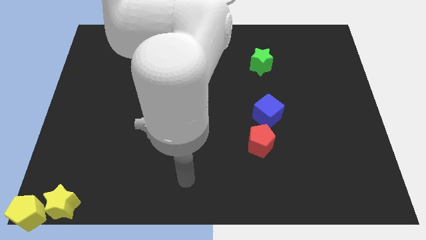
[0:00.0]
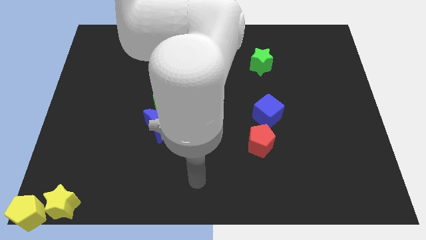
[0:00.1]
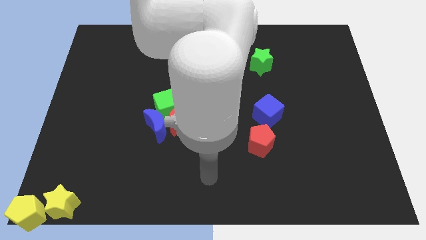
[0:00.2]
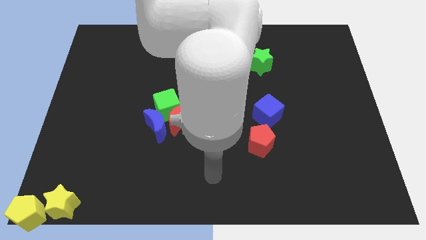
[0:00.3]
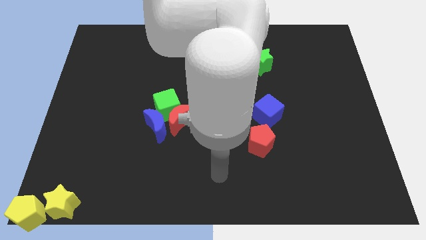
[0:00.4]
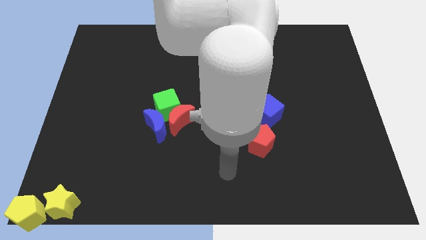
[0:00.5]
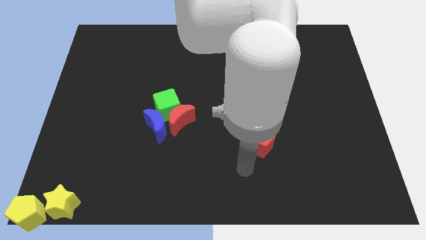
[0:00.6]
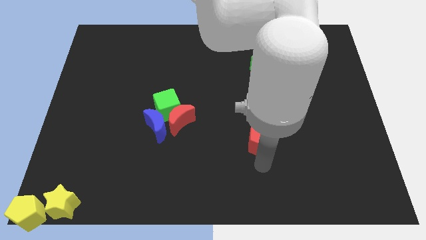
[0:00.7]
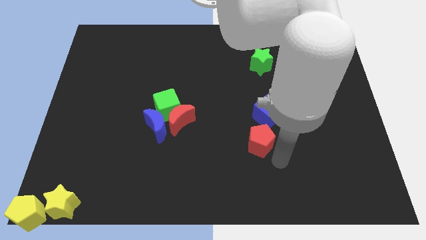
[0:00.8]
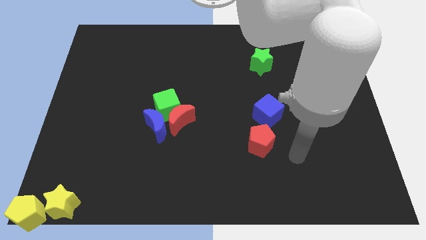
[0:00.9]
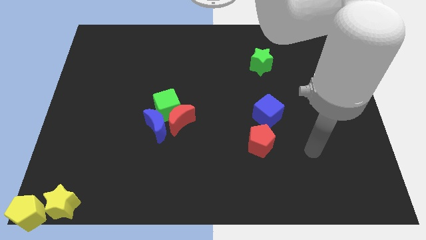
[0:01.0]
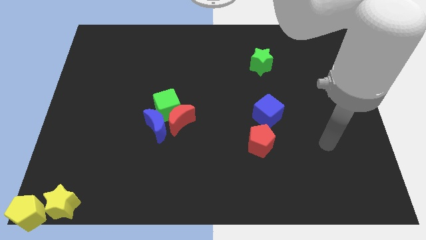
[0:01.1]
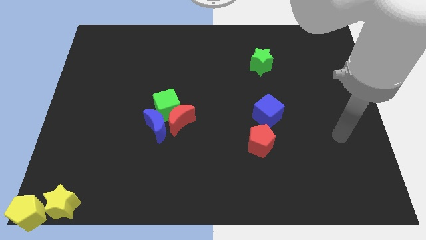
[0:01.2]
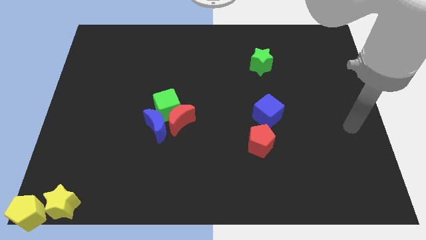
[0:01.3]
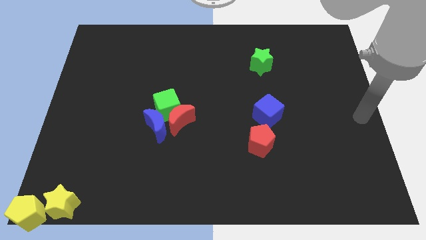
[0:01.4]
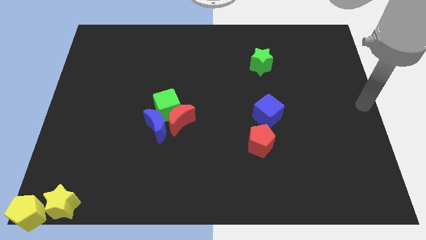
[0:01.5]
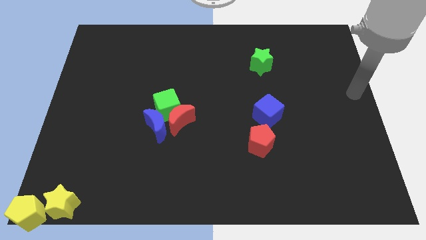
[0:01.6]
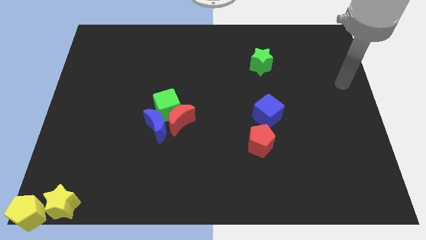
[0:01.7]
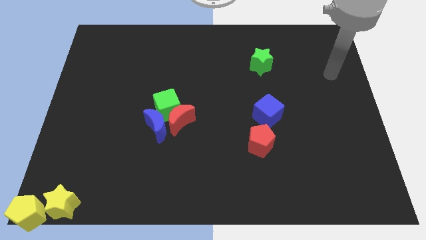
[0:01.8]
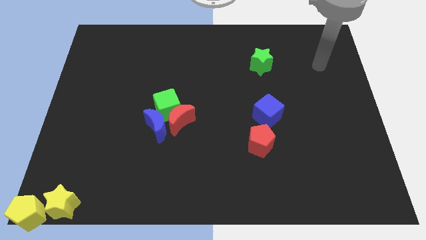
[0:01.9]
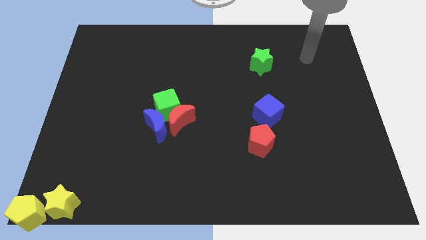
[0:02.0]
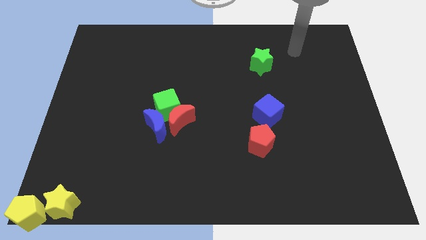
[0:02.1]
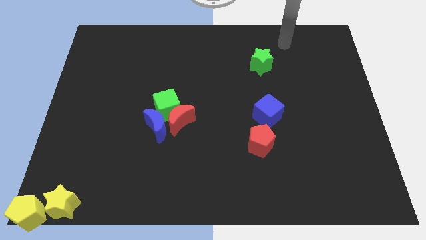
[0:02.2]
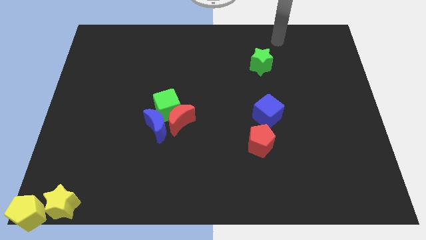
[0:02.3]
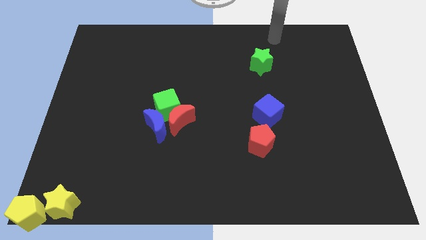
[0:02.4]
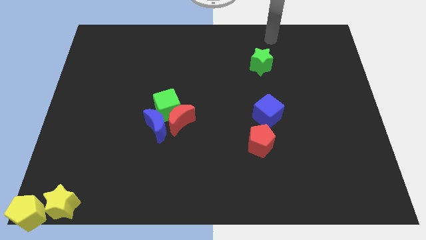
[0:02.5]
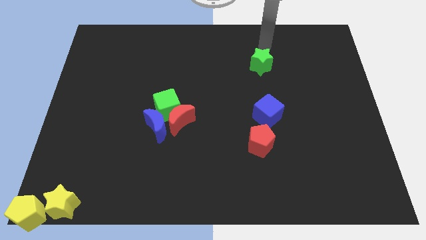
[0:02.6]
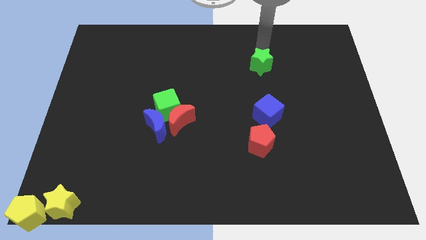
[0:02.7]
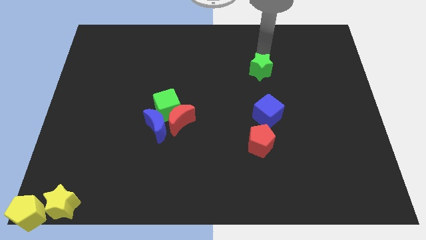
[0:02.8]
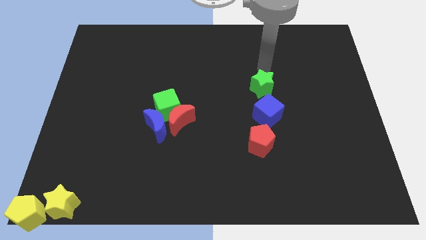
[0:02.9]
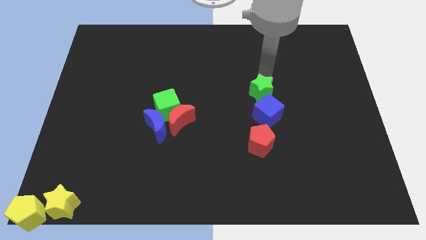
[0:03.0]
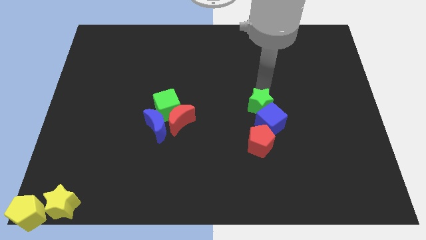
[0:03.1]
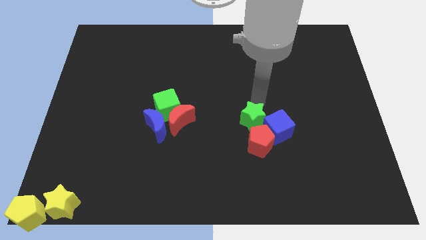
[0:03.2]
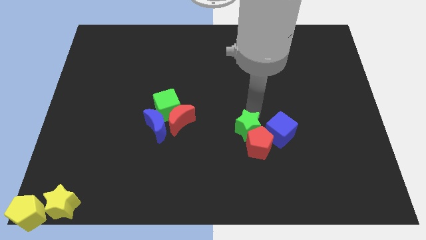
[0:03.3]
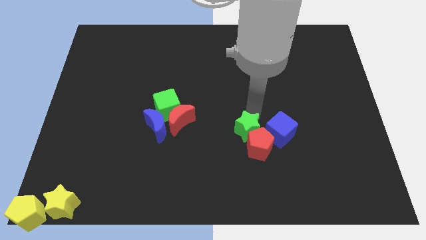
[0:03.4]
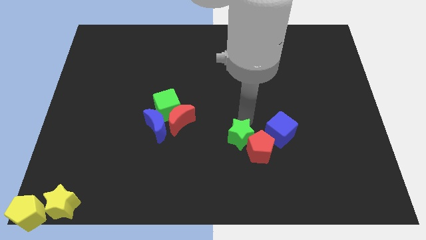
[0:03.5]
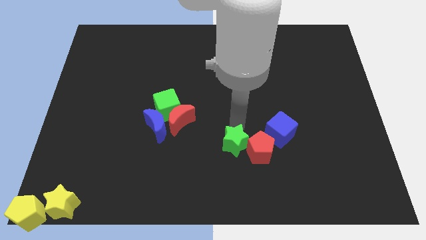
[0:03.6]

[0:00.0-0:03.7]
move the green star to the top left of red pentagon

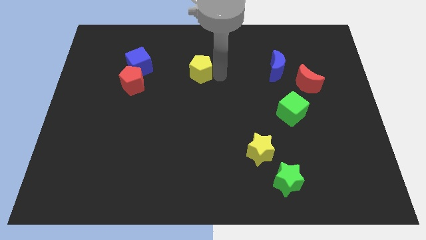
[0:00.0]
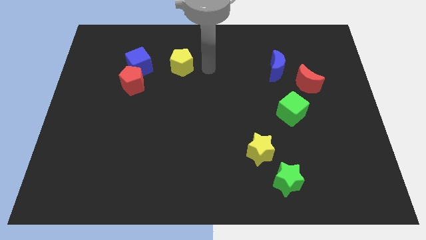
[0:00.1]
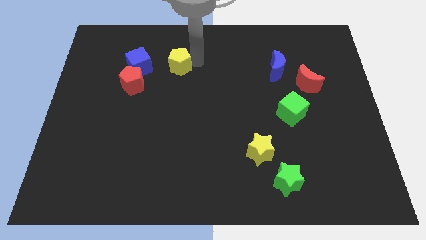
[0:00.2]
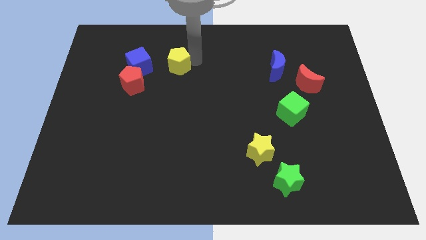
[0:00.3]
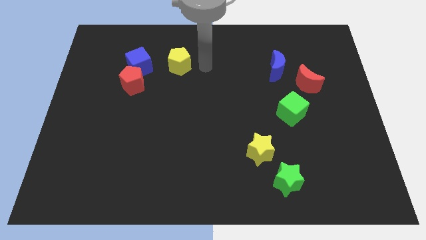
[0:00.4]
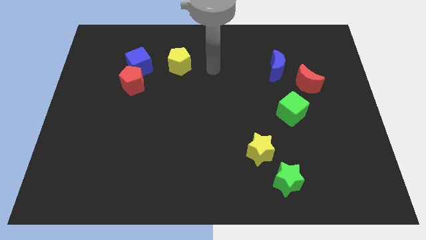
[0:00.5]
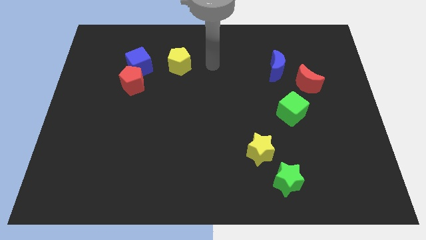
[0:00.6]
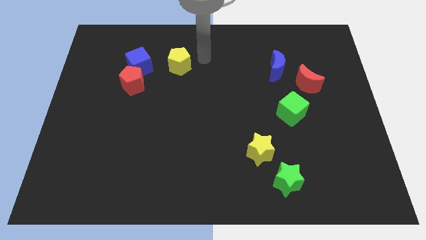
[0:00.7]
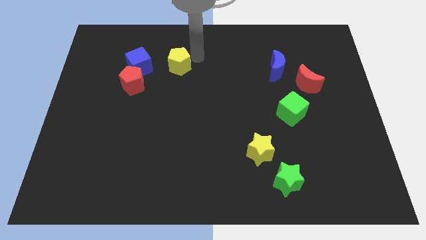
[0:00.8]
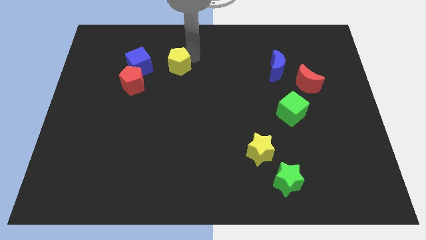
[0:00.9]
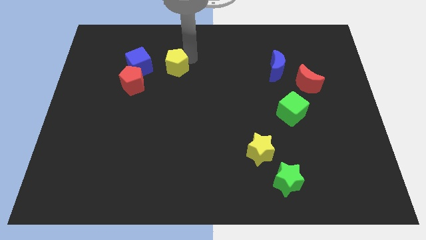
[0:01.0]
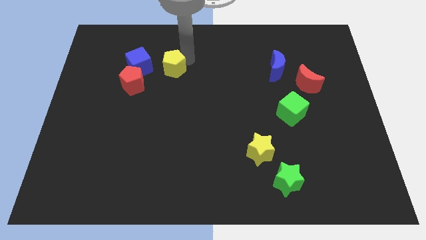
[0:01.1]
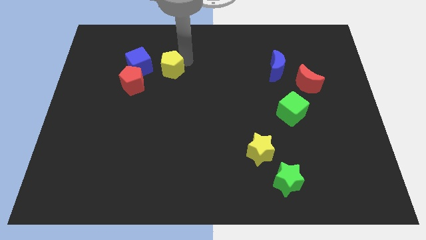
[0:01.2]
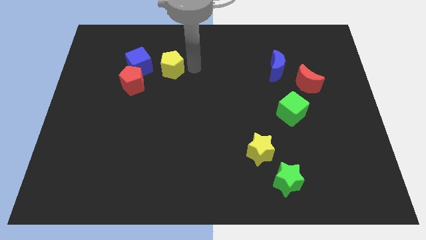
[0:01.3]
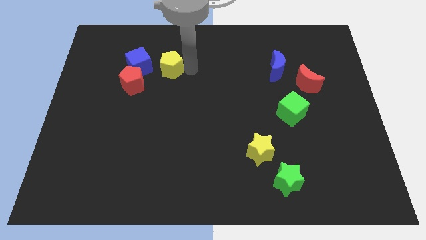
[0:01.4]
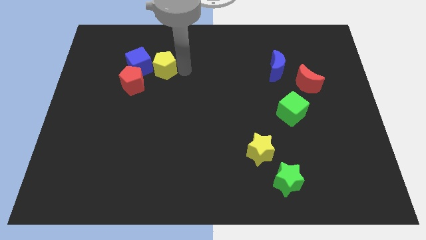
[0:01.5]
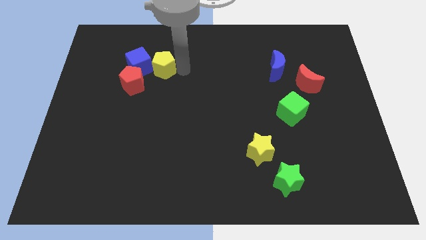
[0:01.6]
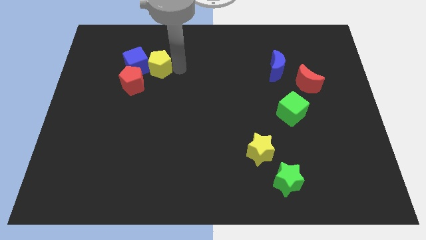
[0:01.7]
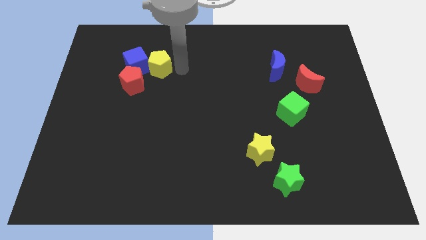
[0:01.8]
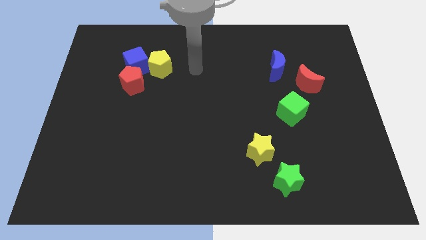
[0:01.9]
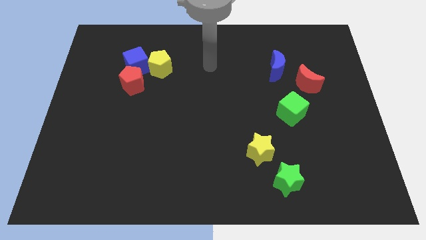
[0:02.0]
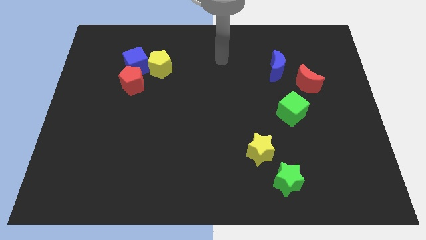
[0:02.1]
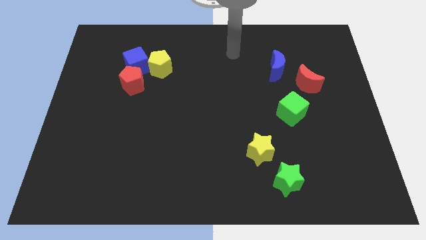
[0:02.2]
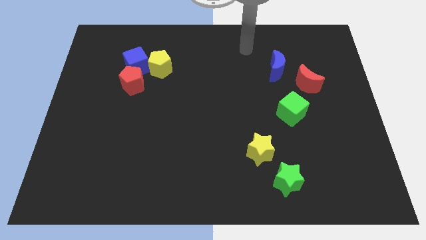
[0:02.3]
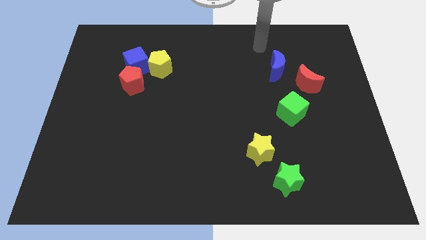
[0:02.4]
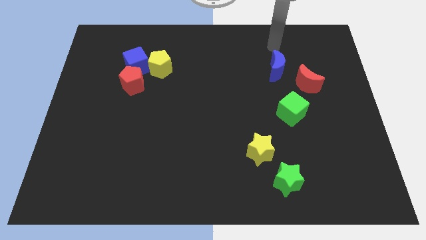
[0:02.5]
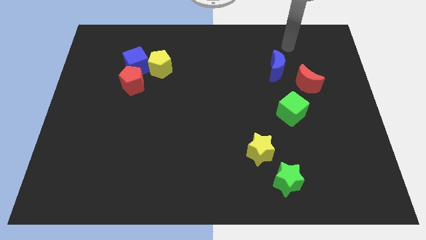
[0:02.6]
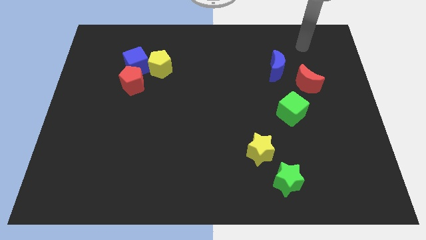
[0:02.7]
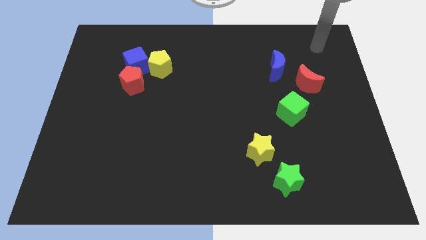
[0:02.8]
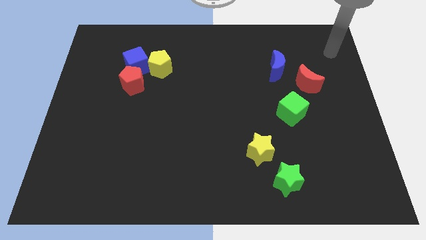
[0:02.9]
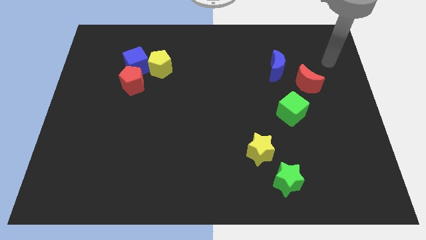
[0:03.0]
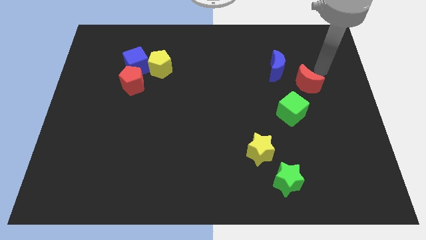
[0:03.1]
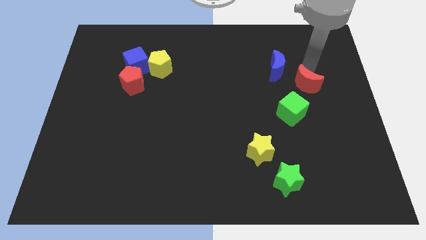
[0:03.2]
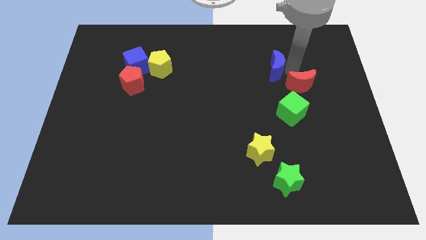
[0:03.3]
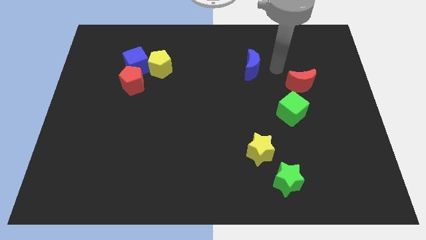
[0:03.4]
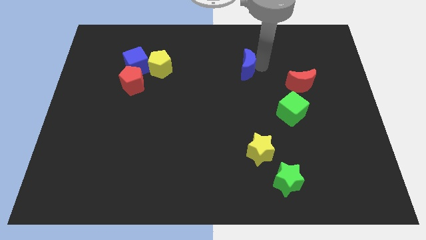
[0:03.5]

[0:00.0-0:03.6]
slightly touch down the red moon

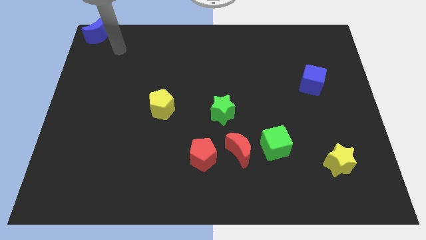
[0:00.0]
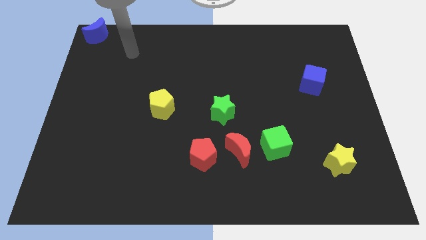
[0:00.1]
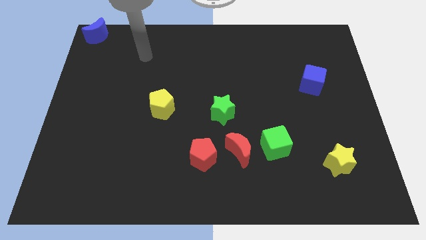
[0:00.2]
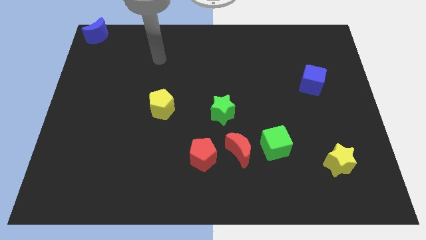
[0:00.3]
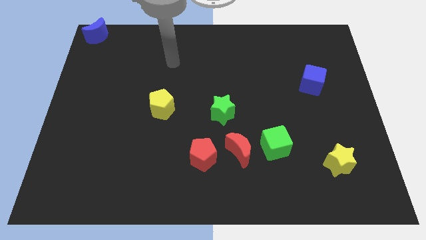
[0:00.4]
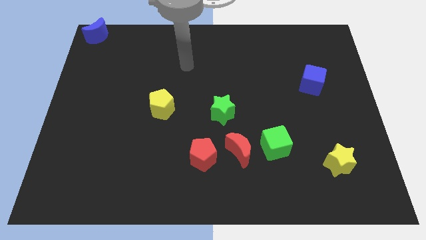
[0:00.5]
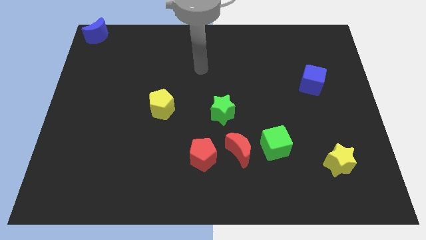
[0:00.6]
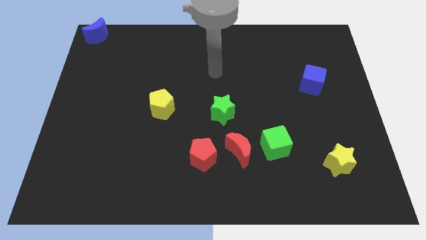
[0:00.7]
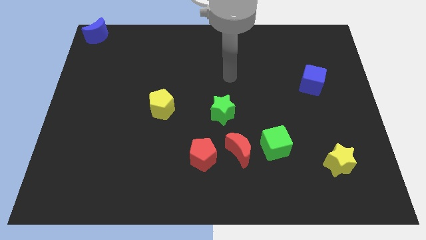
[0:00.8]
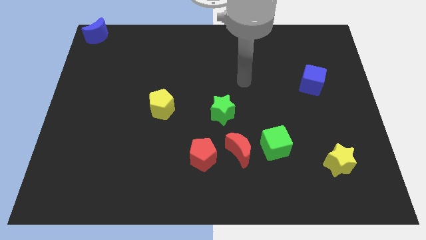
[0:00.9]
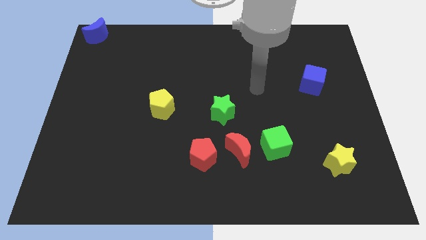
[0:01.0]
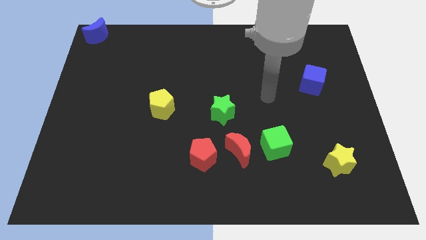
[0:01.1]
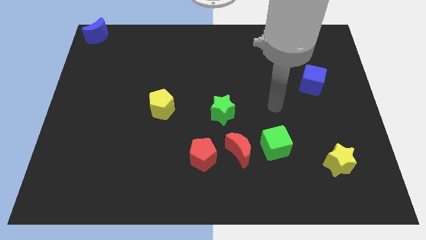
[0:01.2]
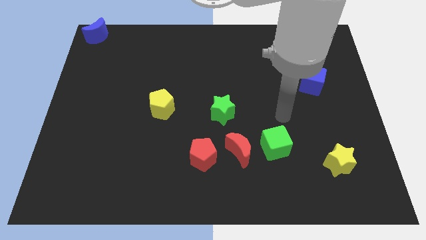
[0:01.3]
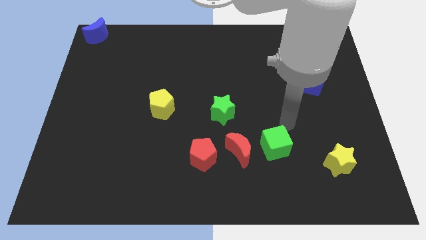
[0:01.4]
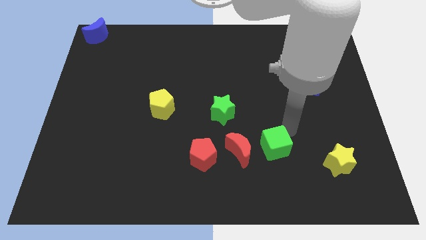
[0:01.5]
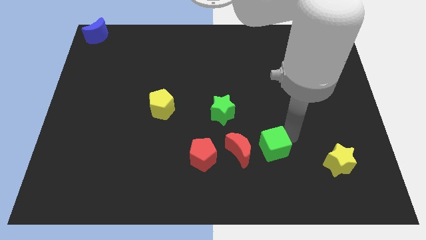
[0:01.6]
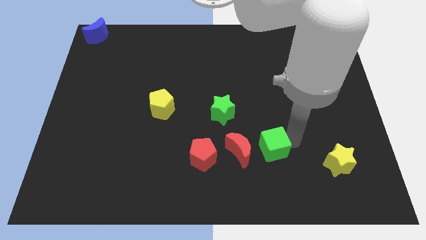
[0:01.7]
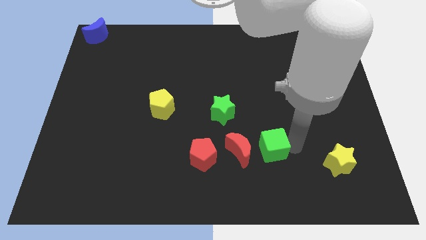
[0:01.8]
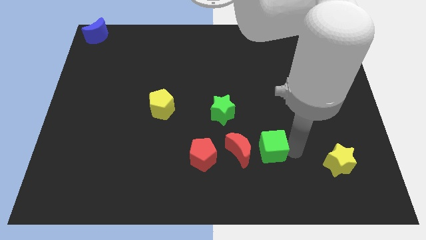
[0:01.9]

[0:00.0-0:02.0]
move the arm towards the right side of the green cube
